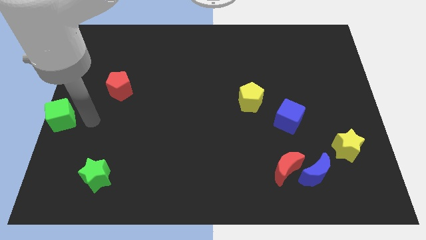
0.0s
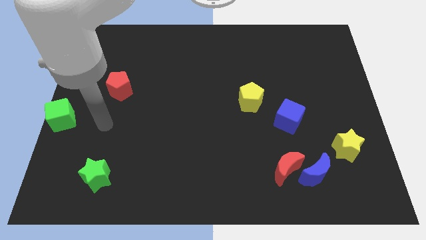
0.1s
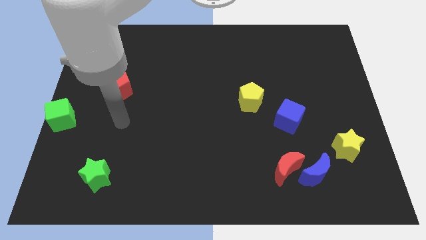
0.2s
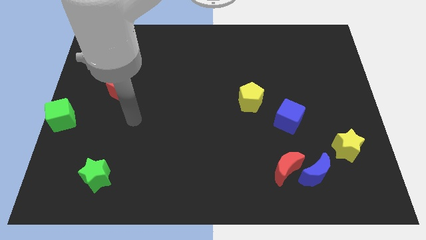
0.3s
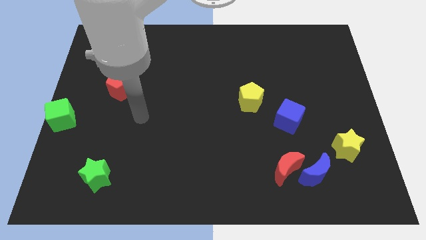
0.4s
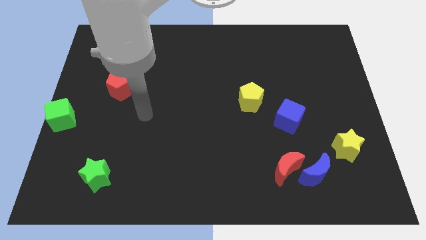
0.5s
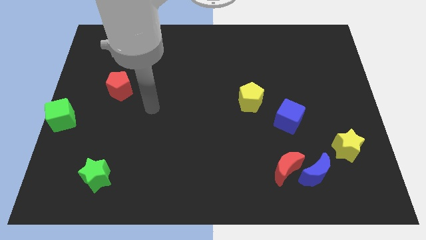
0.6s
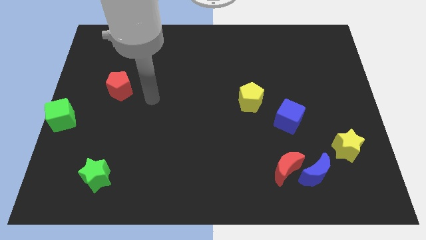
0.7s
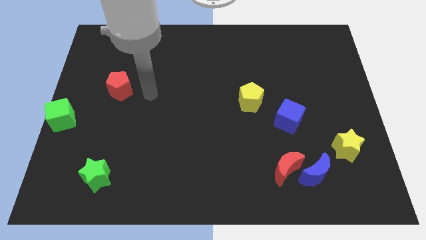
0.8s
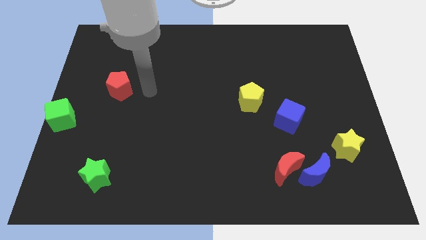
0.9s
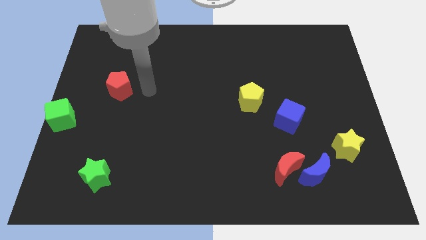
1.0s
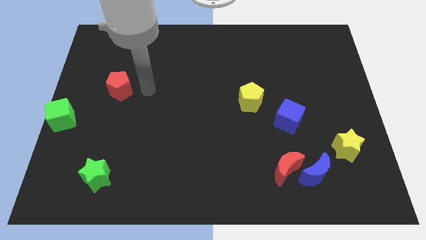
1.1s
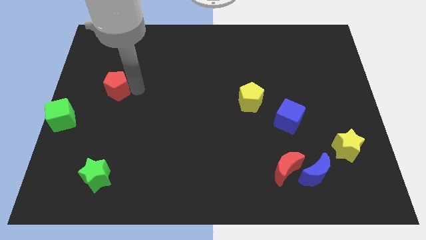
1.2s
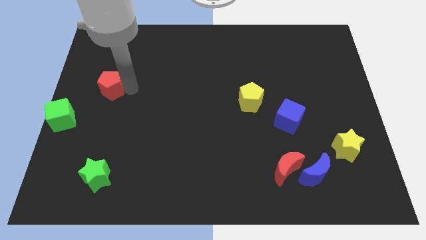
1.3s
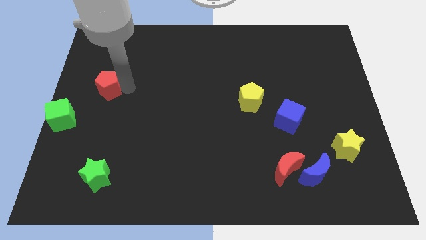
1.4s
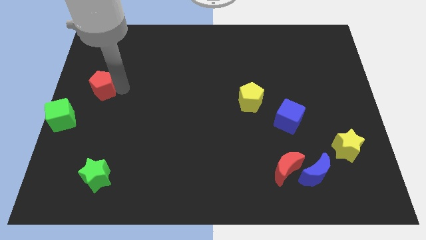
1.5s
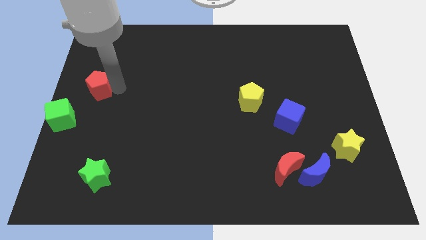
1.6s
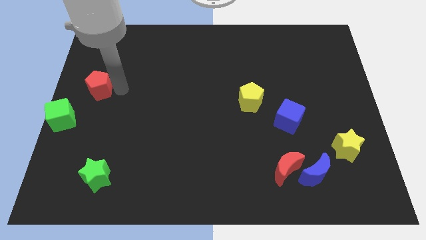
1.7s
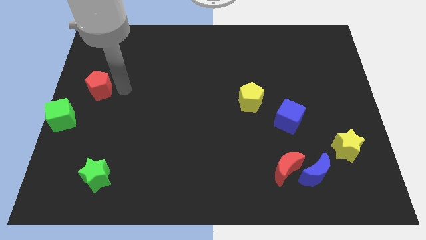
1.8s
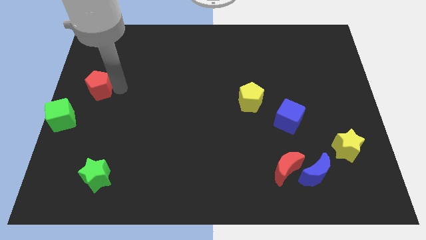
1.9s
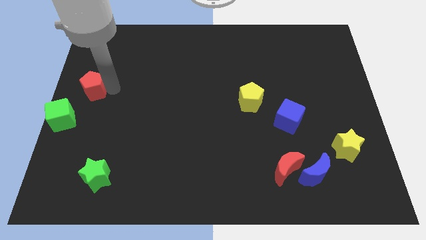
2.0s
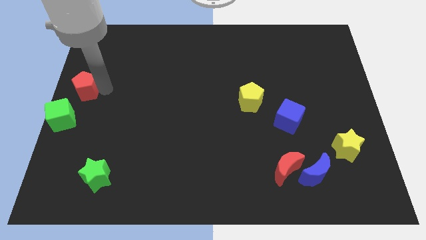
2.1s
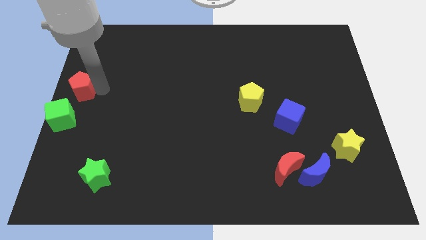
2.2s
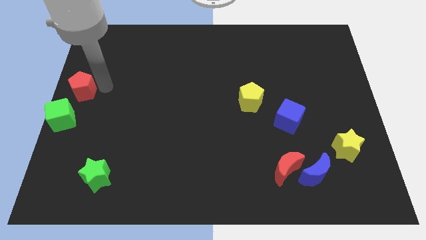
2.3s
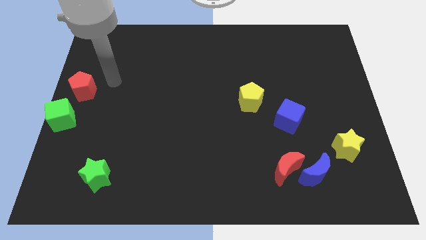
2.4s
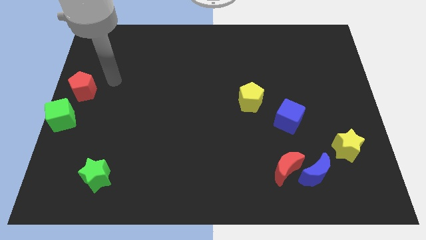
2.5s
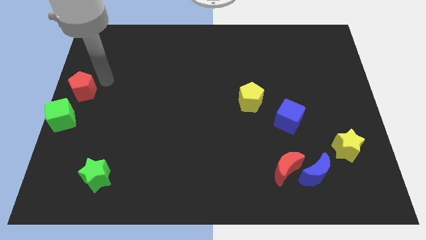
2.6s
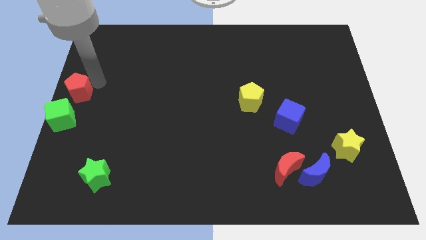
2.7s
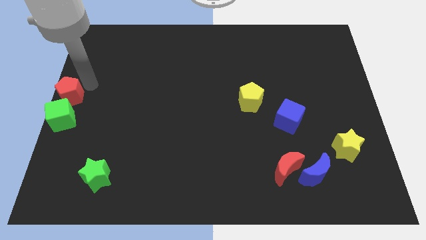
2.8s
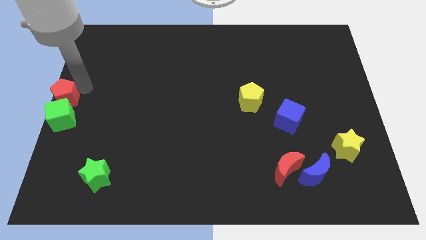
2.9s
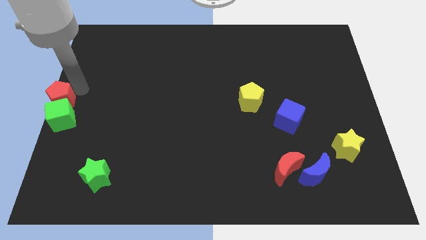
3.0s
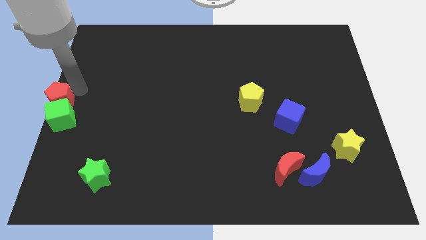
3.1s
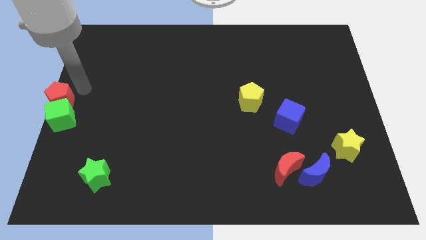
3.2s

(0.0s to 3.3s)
place red pentagon to the top of green cube

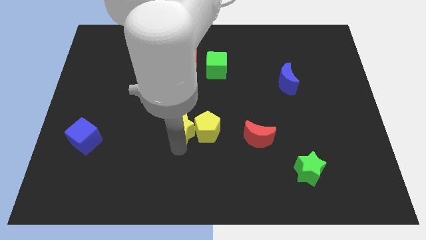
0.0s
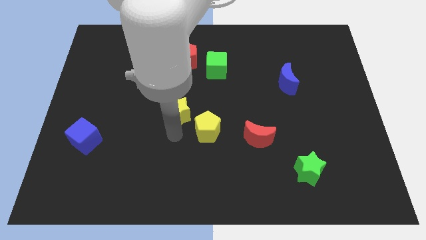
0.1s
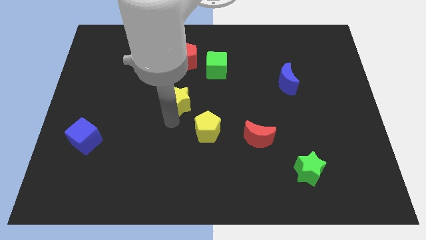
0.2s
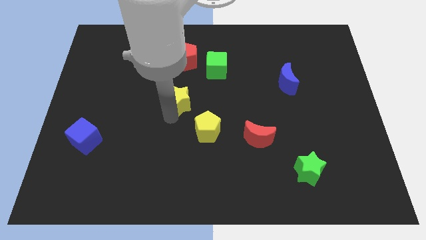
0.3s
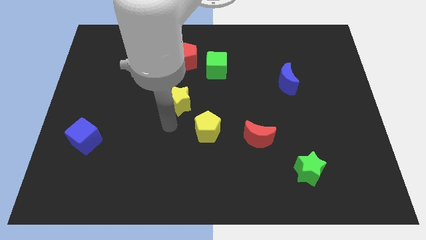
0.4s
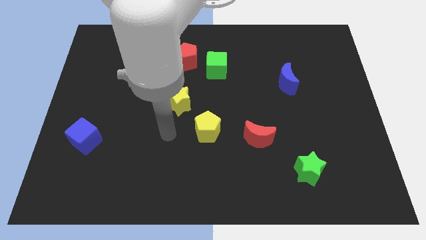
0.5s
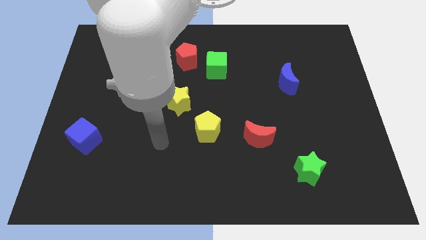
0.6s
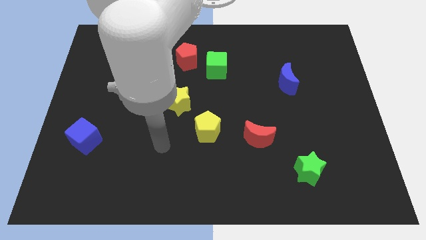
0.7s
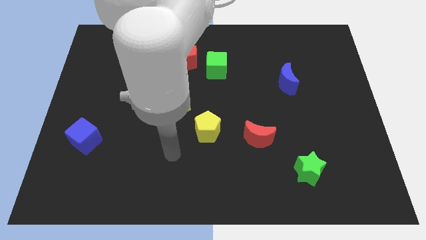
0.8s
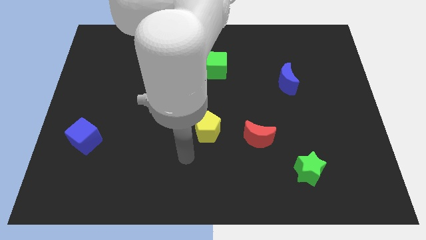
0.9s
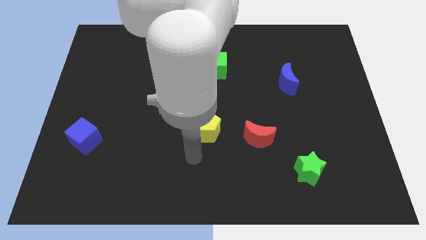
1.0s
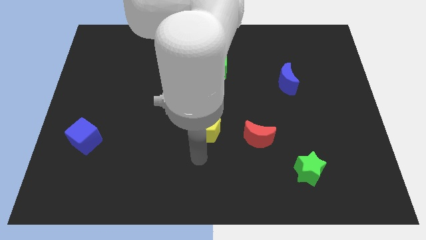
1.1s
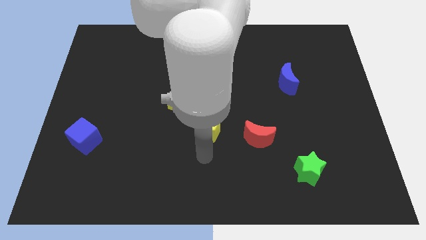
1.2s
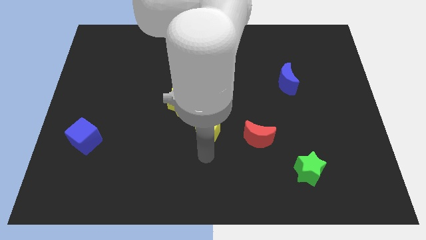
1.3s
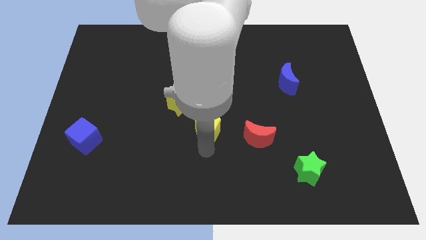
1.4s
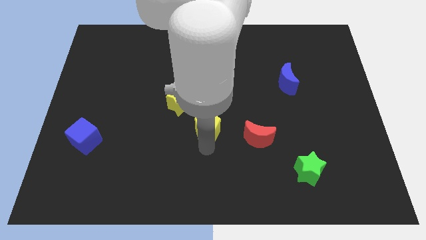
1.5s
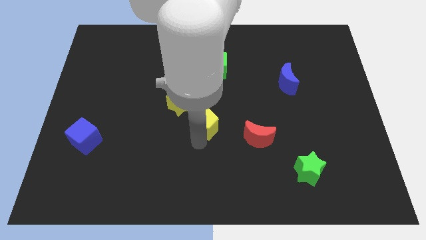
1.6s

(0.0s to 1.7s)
push the yellow star to the top left side of the yellow pentagon

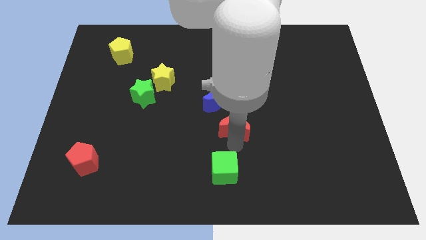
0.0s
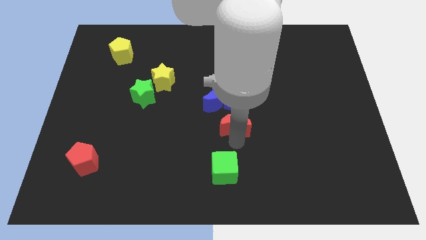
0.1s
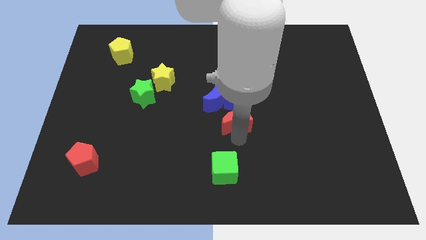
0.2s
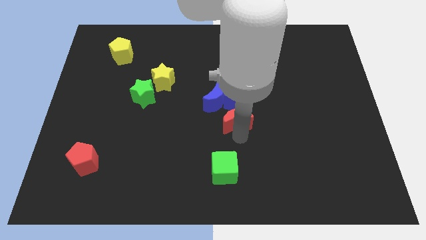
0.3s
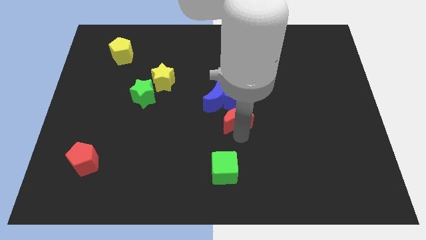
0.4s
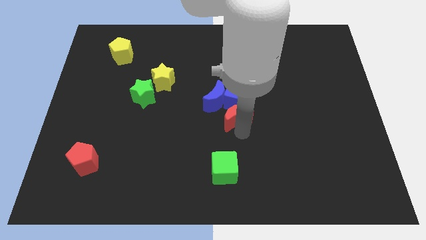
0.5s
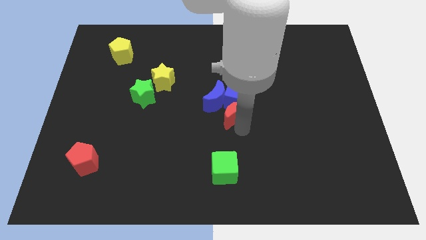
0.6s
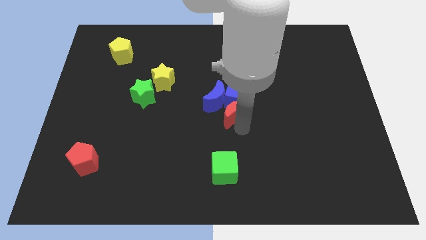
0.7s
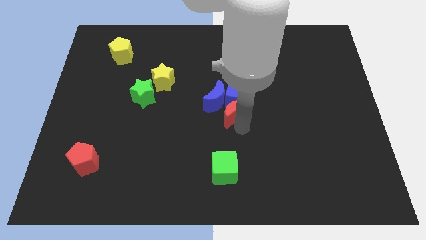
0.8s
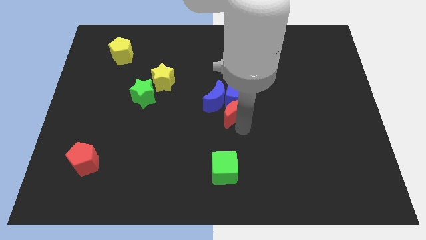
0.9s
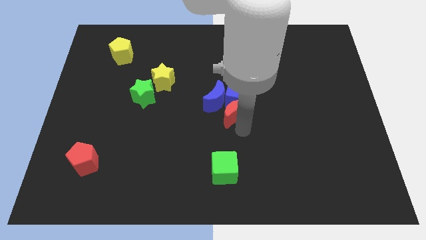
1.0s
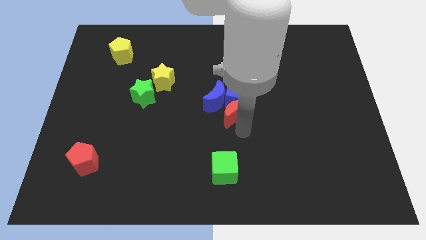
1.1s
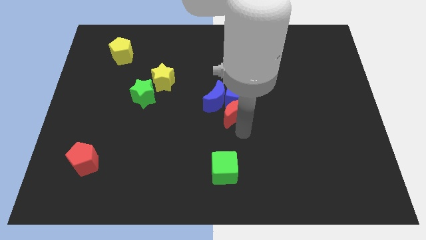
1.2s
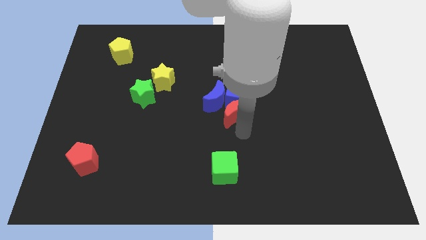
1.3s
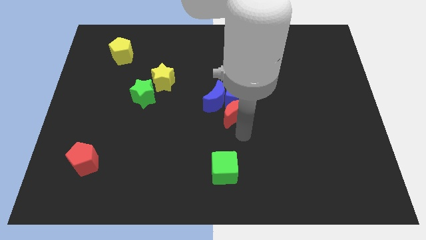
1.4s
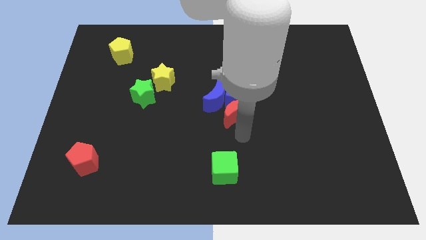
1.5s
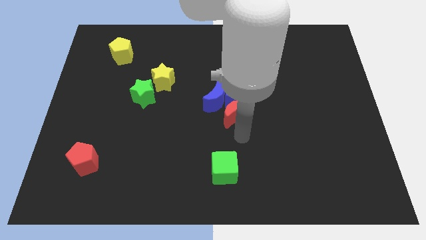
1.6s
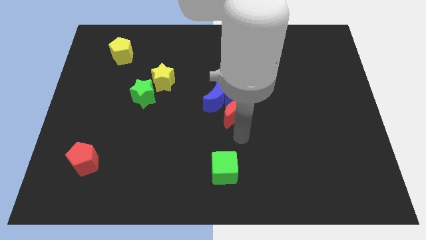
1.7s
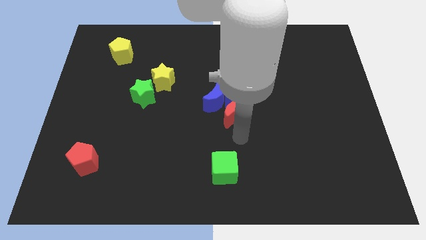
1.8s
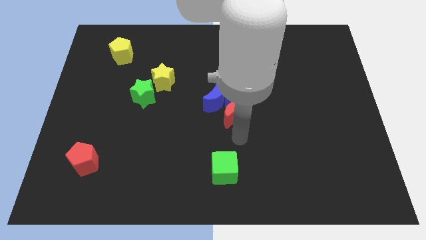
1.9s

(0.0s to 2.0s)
push the red moon into the blue cube

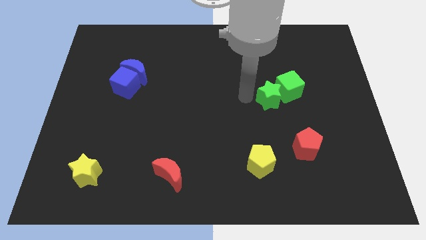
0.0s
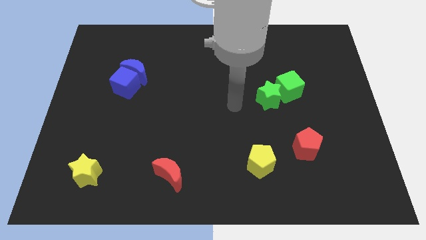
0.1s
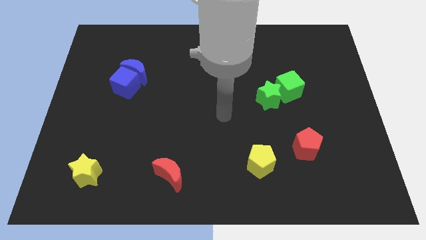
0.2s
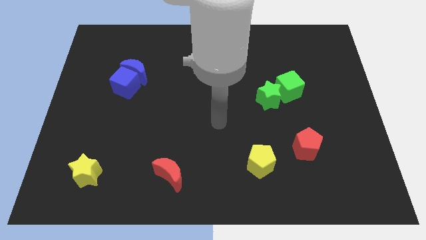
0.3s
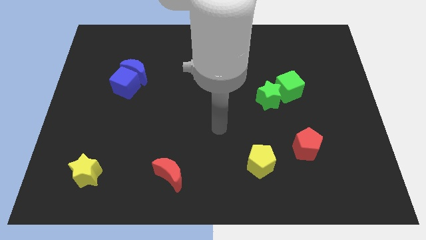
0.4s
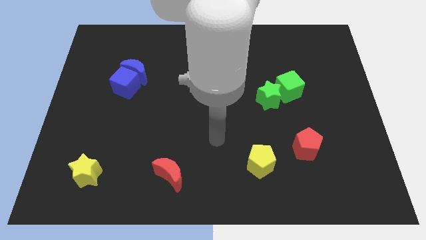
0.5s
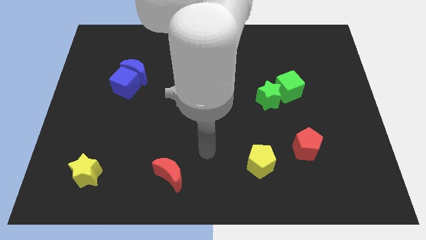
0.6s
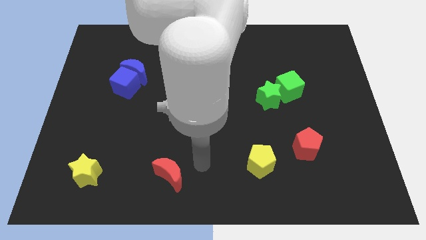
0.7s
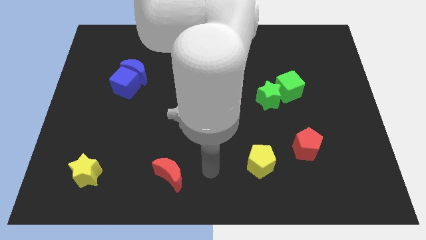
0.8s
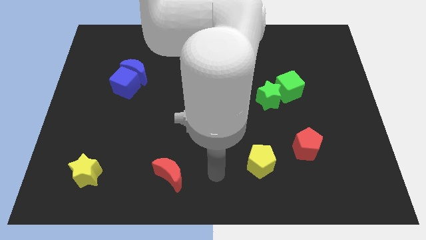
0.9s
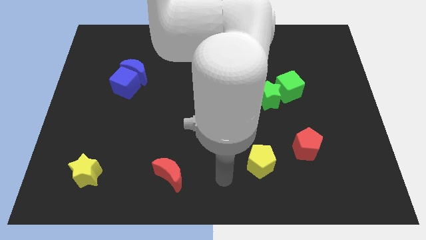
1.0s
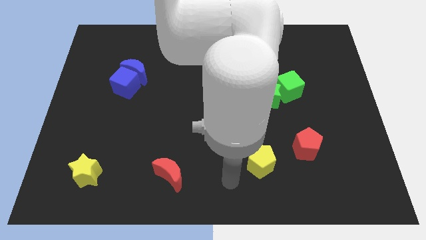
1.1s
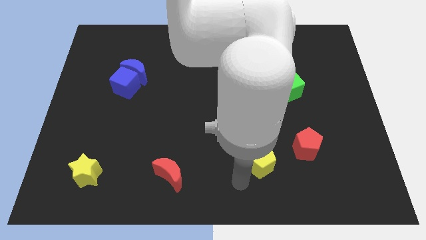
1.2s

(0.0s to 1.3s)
move your arm away from the green star

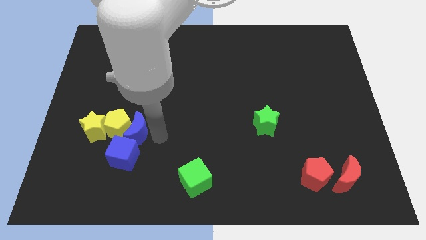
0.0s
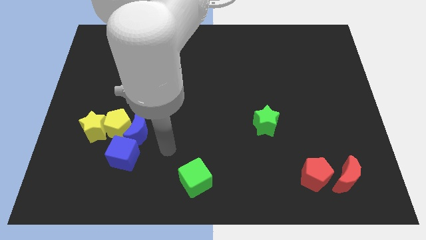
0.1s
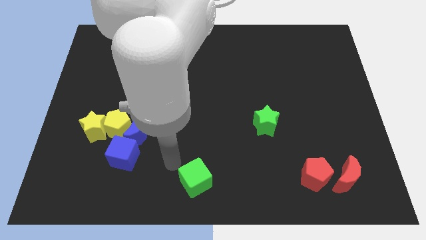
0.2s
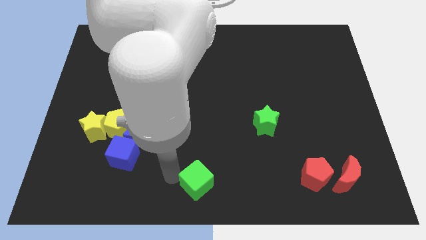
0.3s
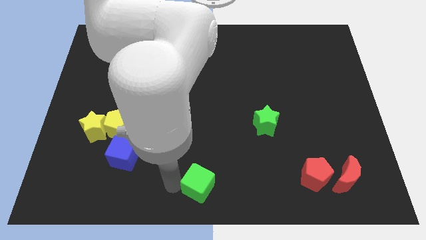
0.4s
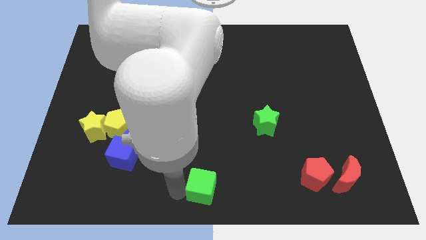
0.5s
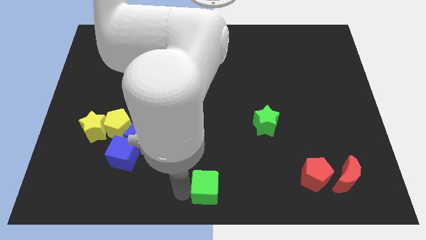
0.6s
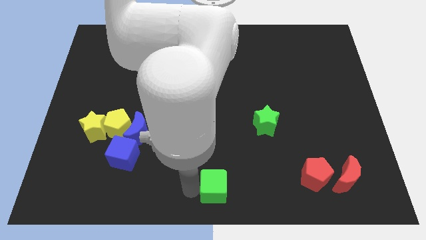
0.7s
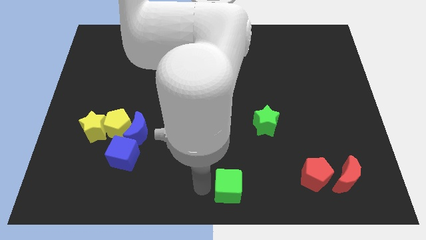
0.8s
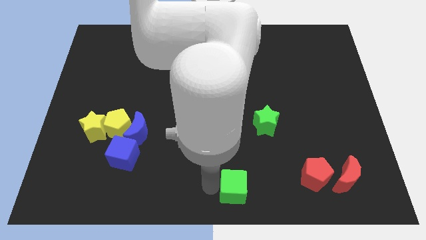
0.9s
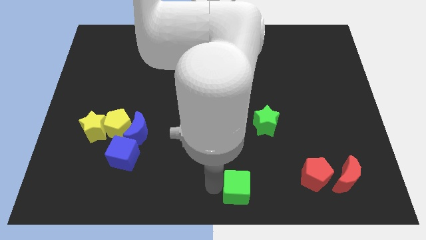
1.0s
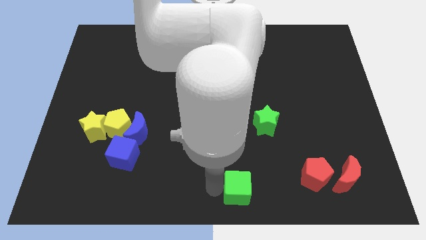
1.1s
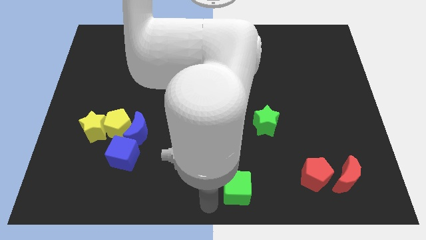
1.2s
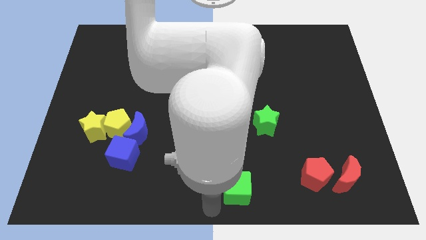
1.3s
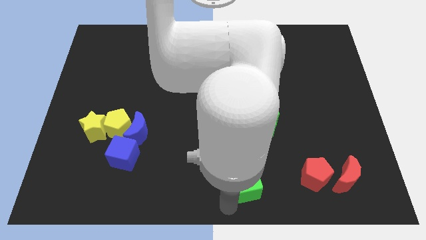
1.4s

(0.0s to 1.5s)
move the green cube to the right side
